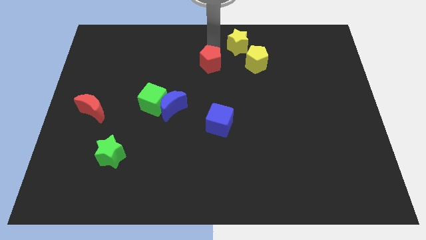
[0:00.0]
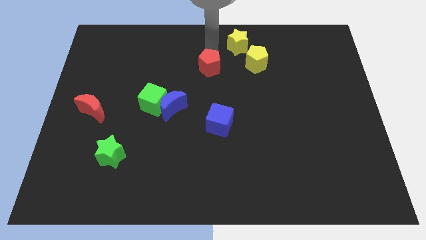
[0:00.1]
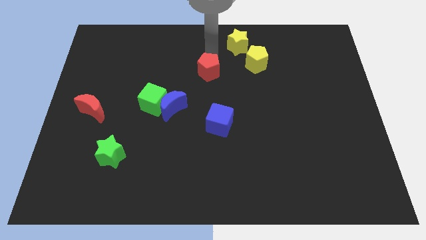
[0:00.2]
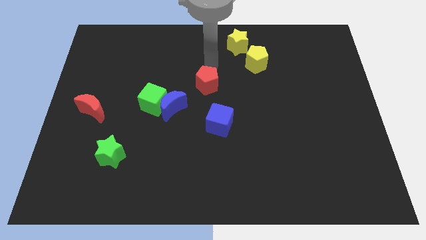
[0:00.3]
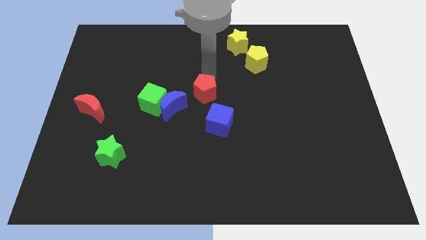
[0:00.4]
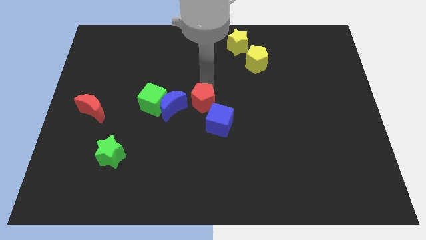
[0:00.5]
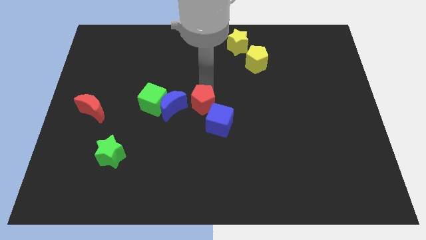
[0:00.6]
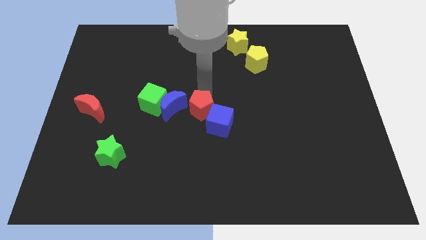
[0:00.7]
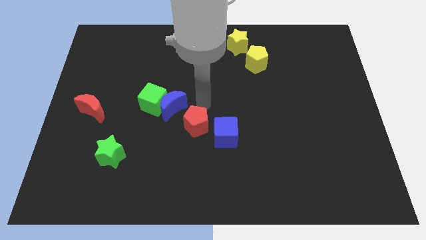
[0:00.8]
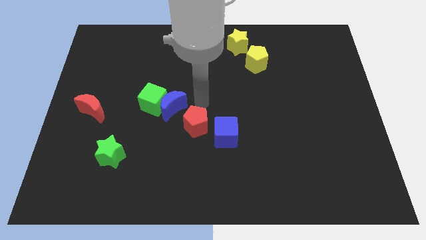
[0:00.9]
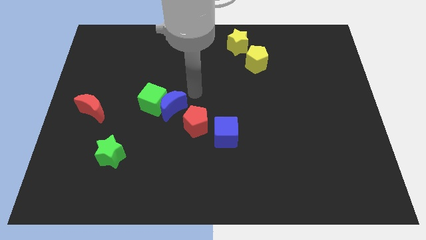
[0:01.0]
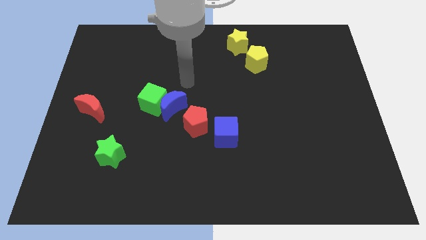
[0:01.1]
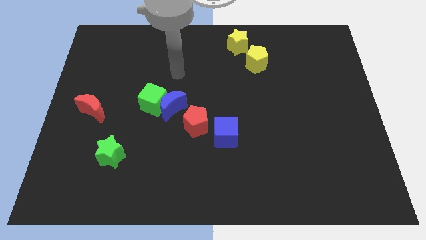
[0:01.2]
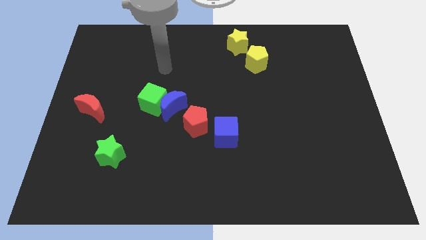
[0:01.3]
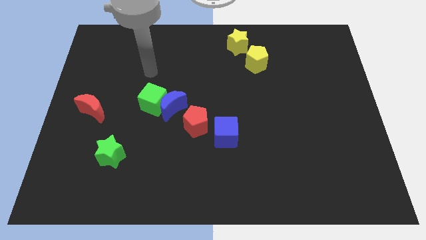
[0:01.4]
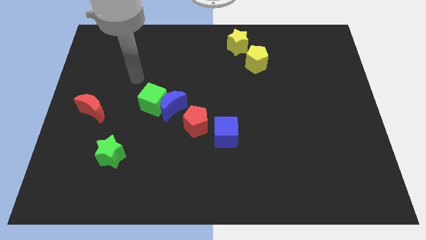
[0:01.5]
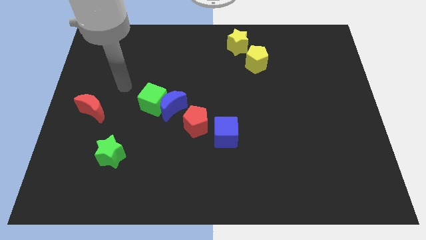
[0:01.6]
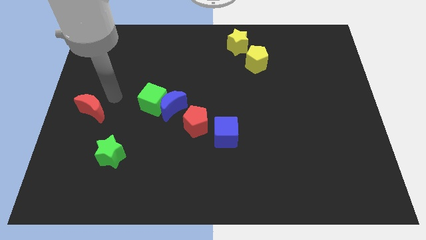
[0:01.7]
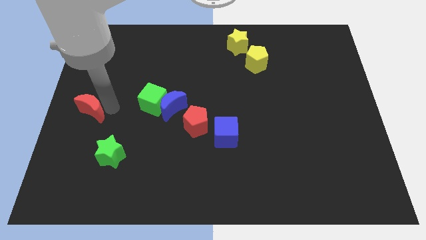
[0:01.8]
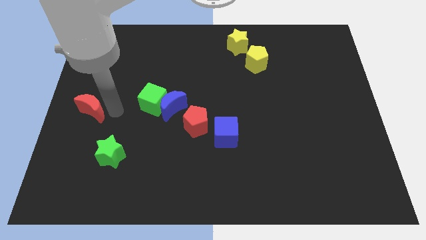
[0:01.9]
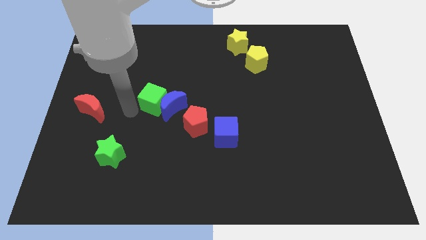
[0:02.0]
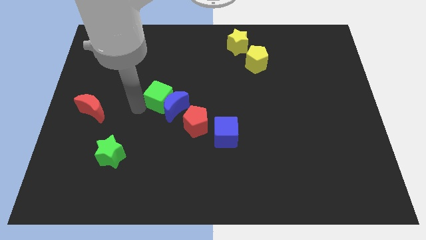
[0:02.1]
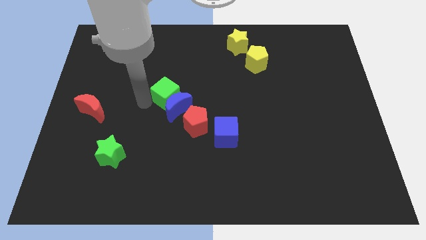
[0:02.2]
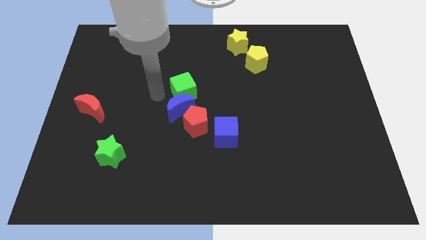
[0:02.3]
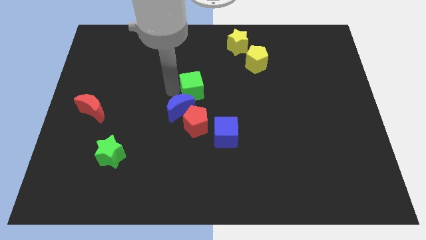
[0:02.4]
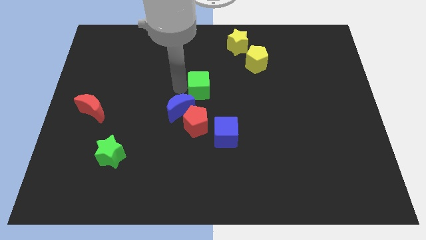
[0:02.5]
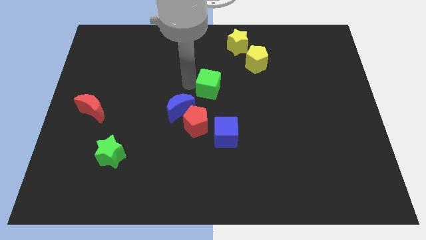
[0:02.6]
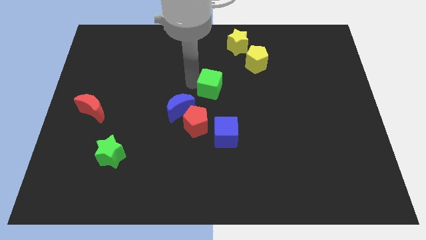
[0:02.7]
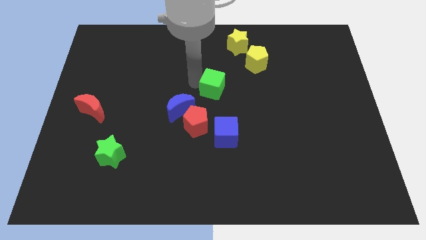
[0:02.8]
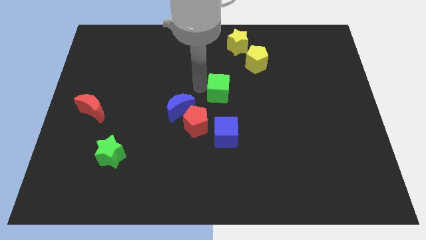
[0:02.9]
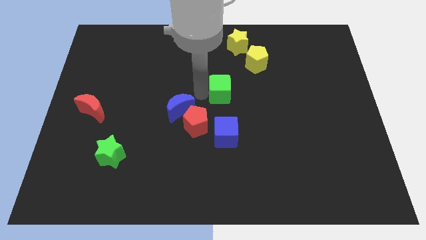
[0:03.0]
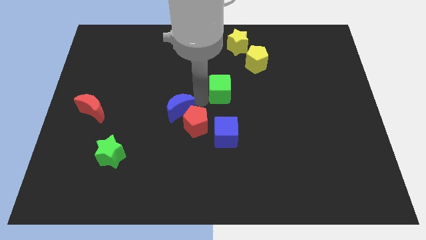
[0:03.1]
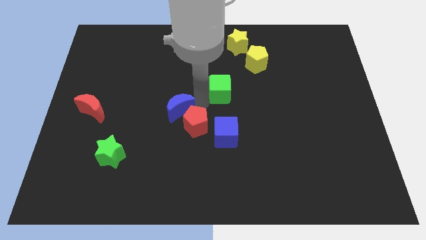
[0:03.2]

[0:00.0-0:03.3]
place the green cube above the blue cube

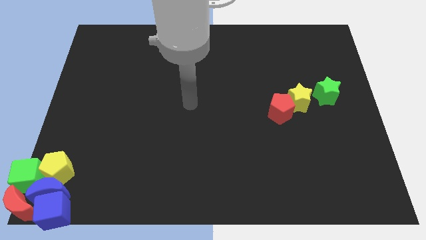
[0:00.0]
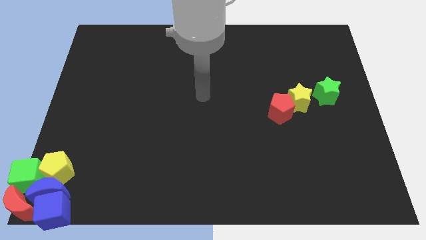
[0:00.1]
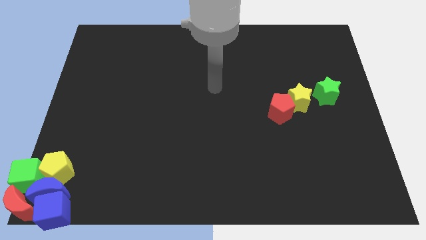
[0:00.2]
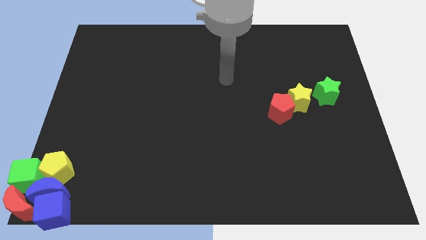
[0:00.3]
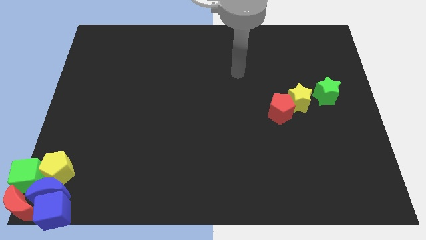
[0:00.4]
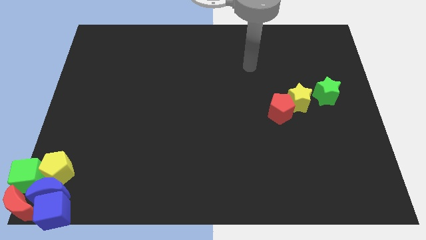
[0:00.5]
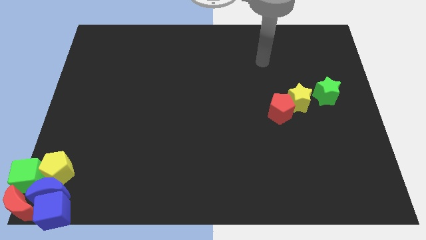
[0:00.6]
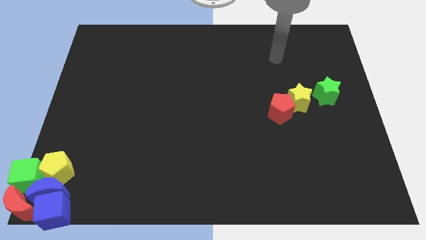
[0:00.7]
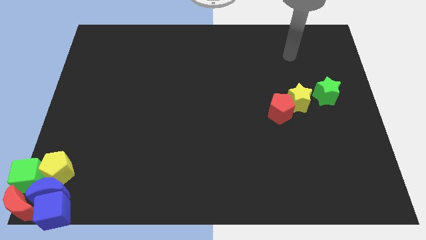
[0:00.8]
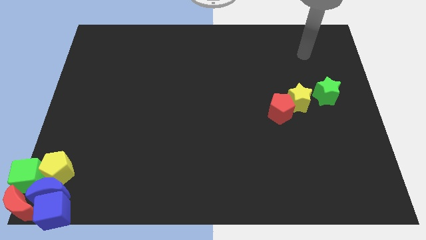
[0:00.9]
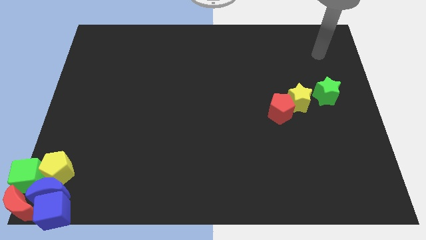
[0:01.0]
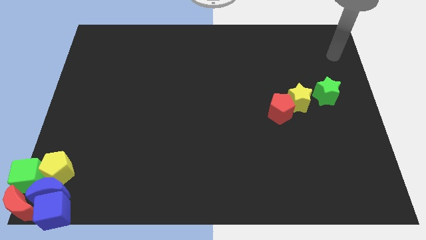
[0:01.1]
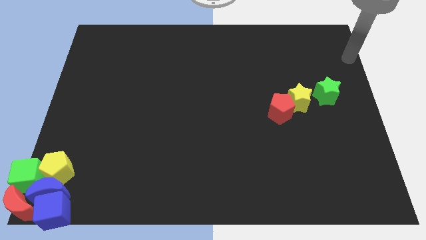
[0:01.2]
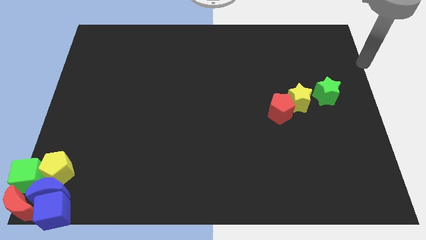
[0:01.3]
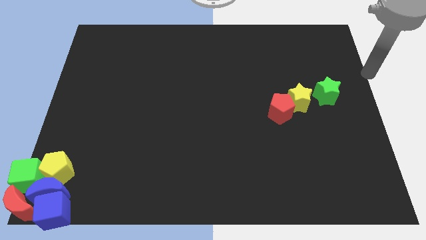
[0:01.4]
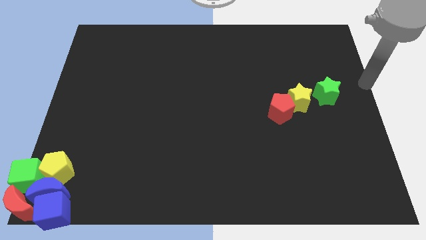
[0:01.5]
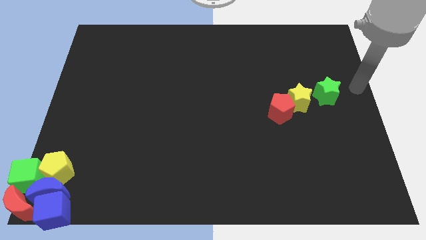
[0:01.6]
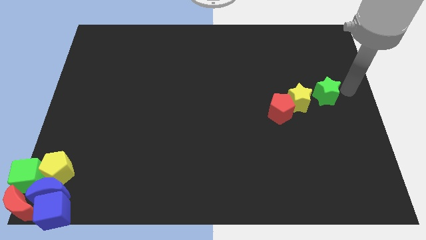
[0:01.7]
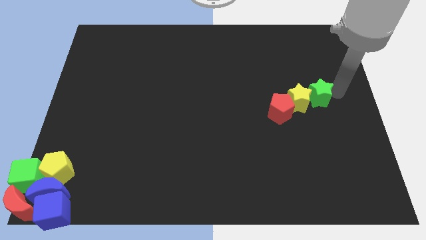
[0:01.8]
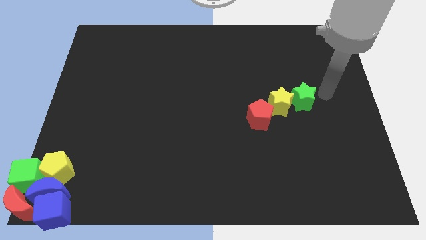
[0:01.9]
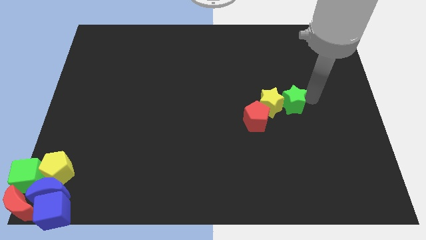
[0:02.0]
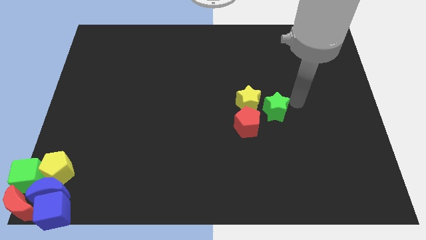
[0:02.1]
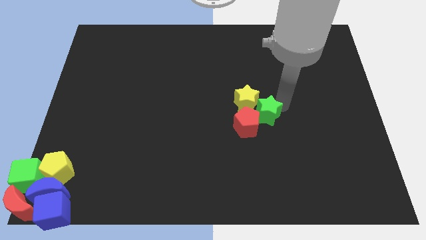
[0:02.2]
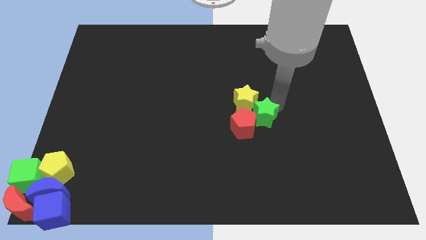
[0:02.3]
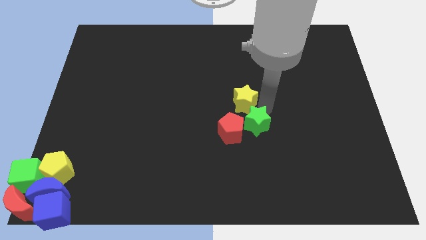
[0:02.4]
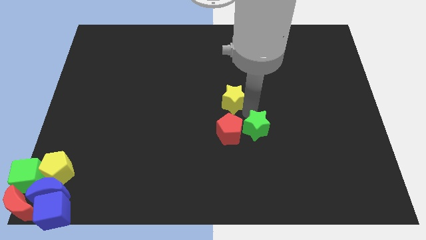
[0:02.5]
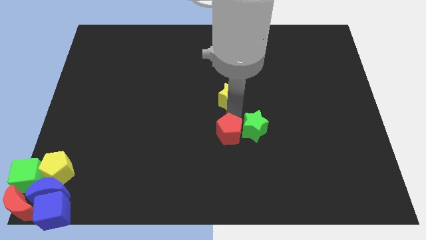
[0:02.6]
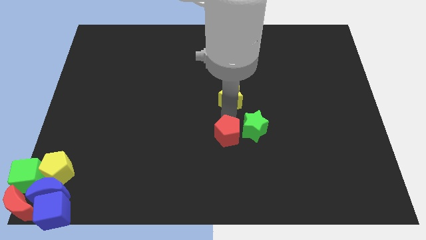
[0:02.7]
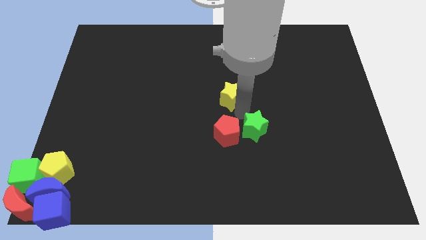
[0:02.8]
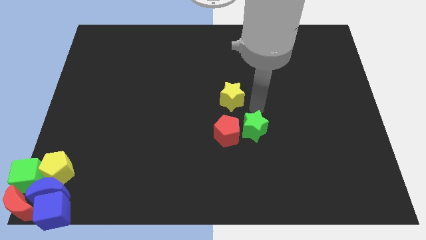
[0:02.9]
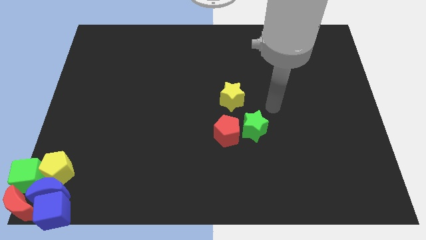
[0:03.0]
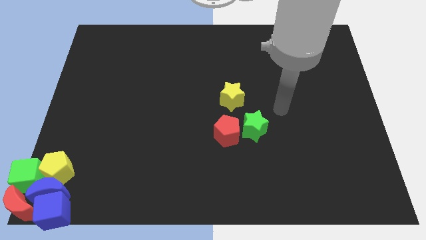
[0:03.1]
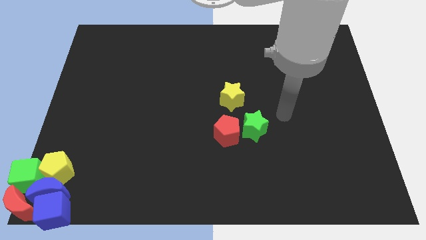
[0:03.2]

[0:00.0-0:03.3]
make a triangle with the group of both stars and red pentagon

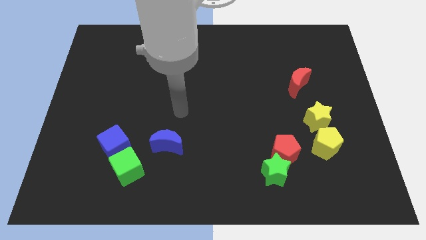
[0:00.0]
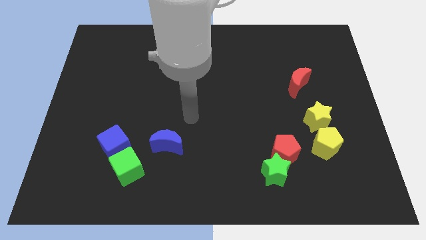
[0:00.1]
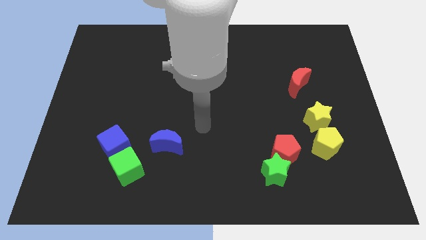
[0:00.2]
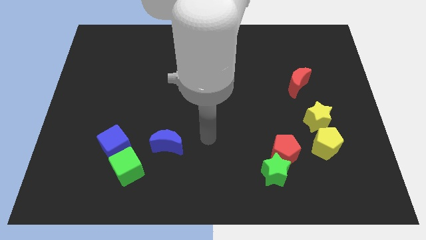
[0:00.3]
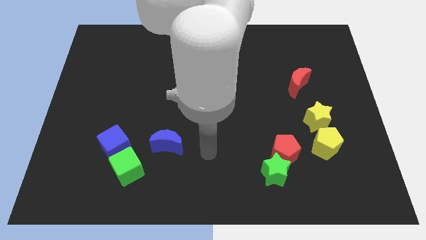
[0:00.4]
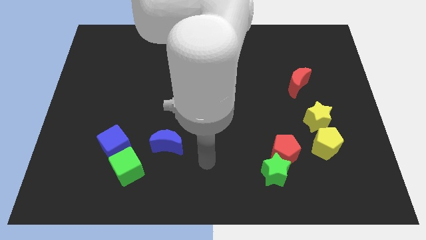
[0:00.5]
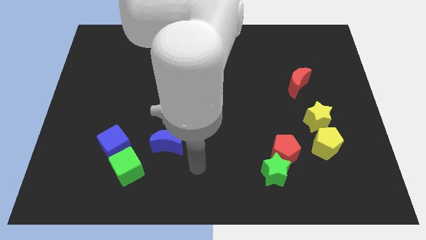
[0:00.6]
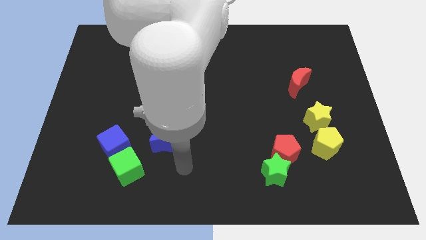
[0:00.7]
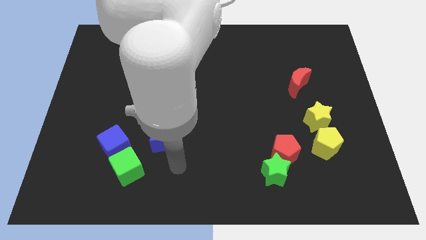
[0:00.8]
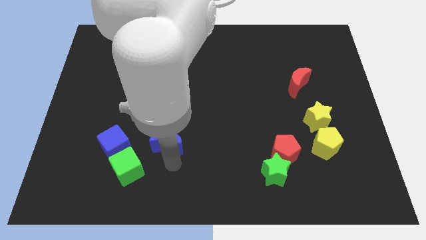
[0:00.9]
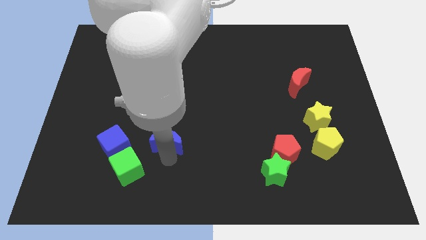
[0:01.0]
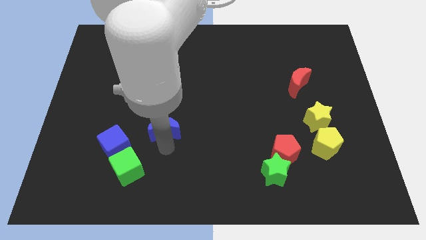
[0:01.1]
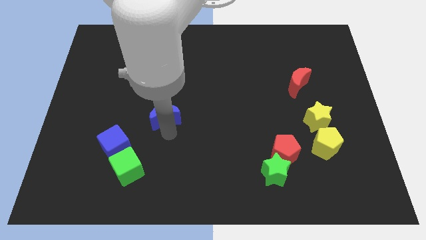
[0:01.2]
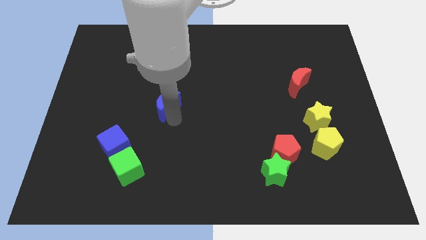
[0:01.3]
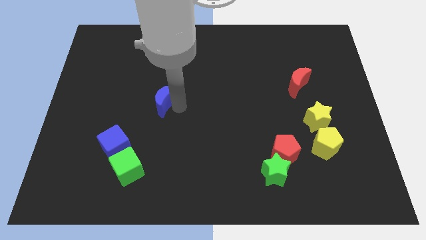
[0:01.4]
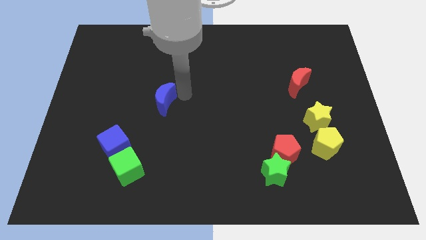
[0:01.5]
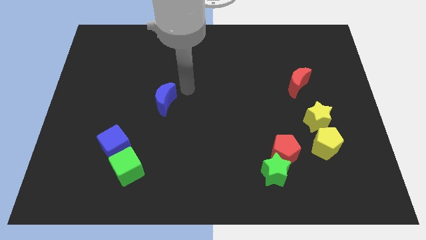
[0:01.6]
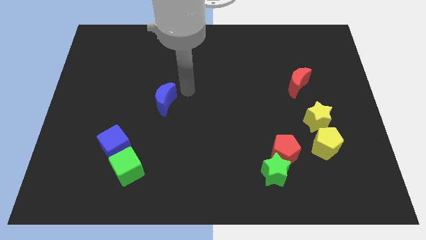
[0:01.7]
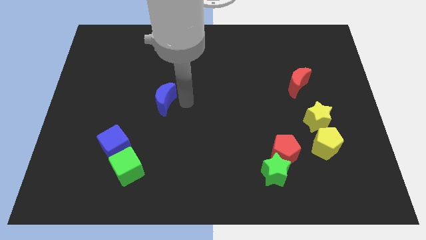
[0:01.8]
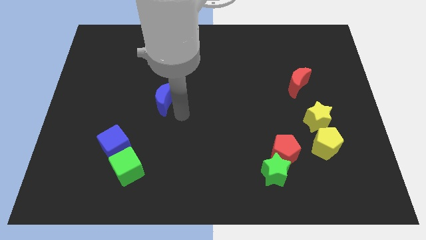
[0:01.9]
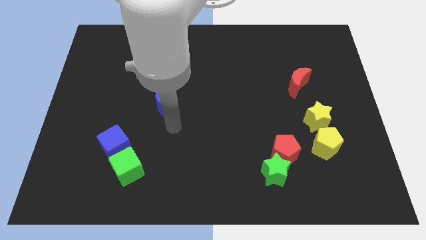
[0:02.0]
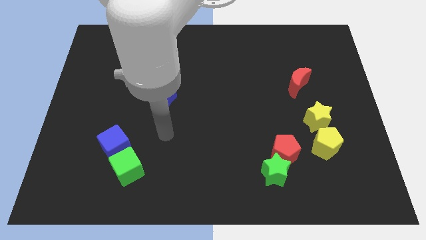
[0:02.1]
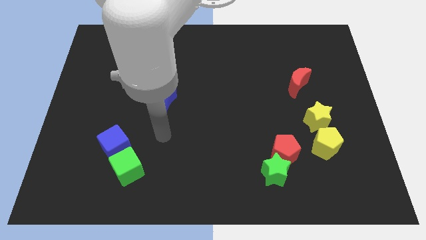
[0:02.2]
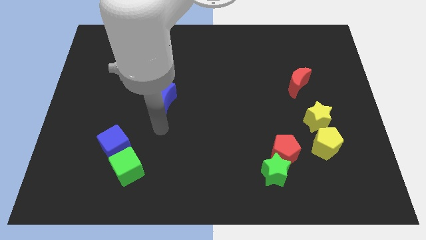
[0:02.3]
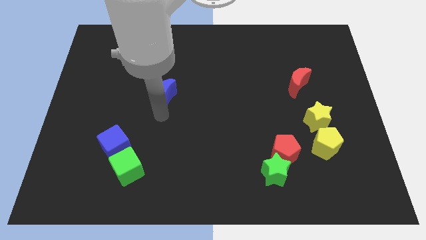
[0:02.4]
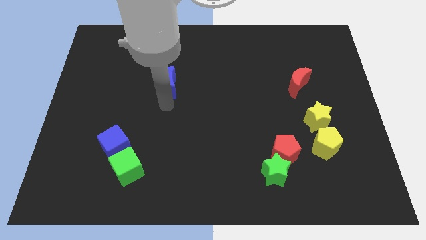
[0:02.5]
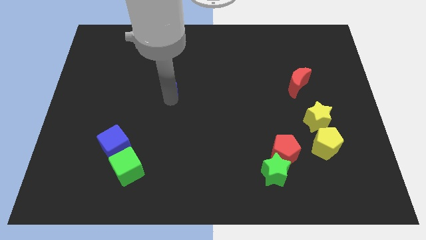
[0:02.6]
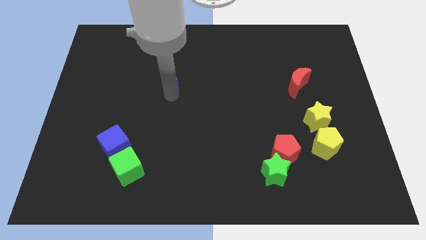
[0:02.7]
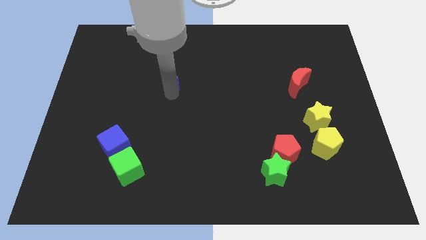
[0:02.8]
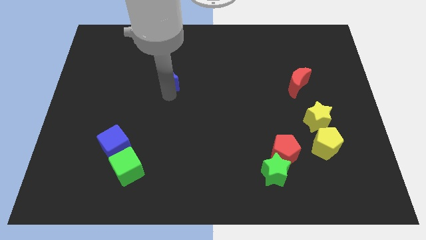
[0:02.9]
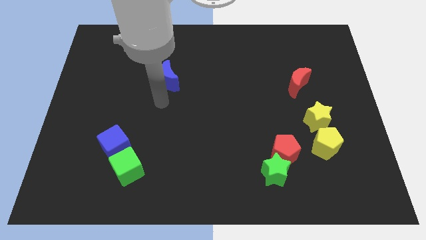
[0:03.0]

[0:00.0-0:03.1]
drag blue moon slightly upwards parallel to red moon
